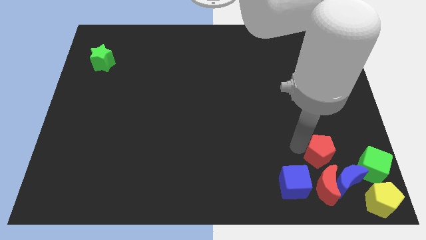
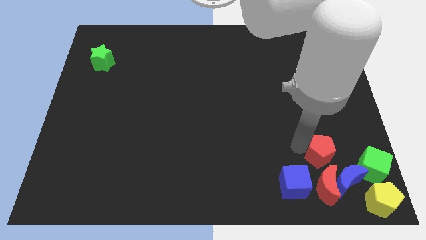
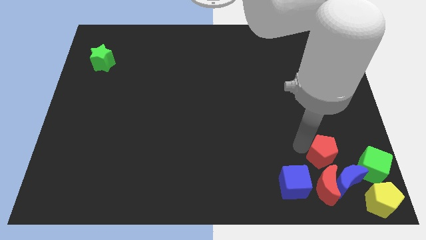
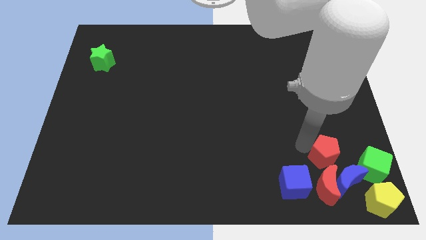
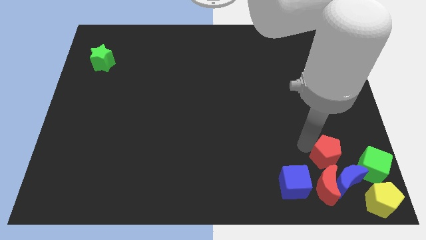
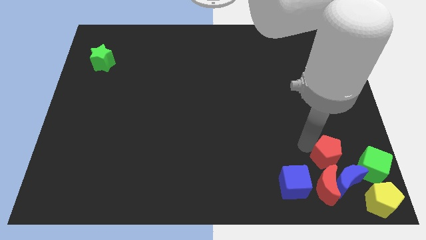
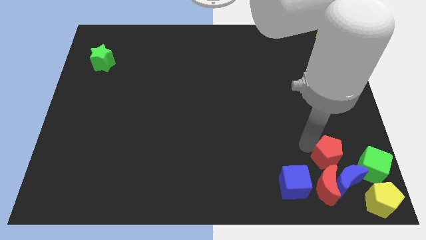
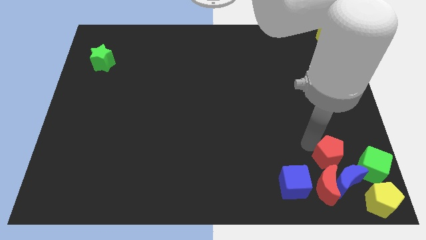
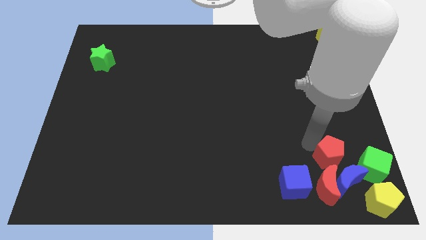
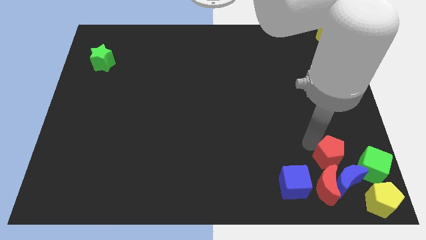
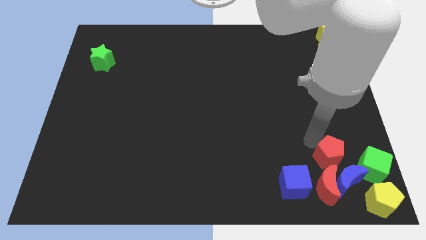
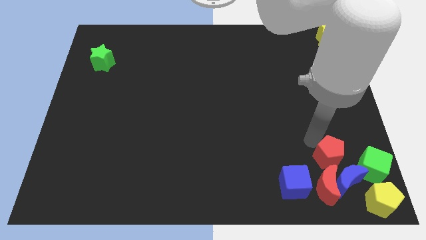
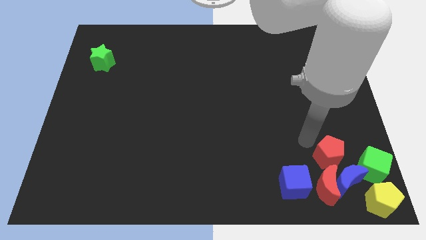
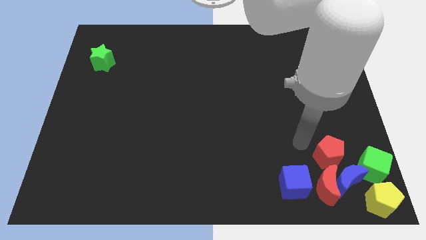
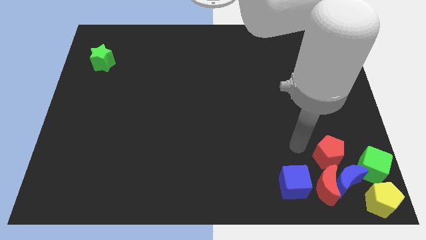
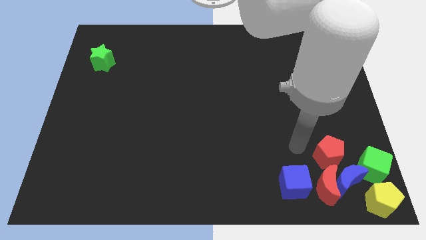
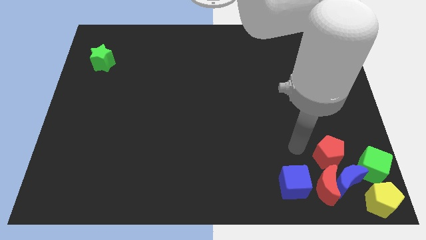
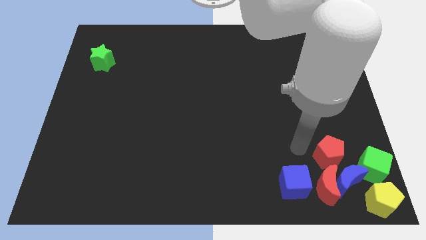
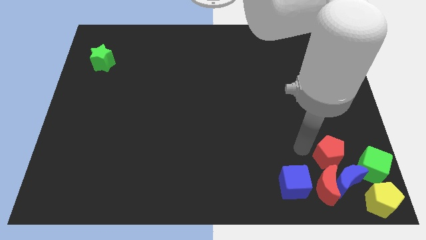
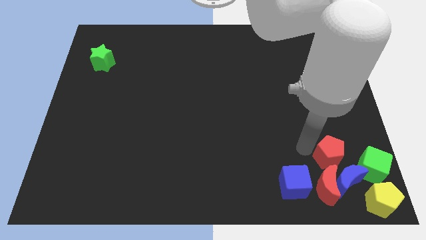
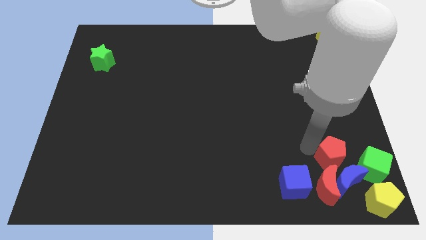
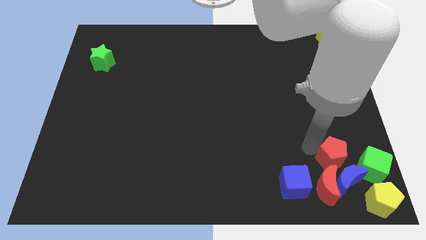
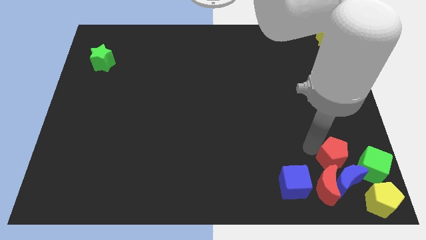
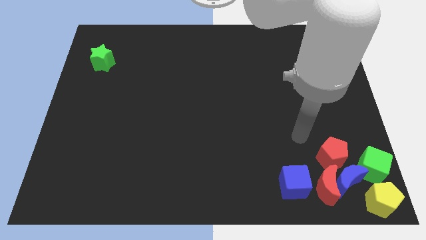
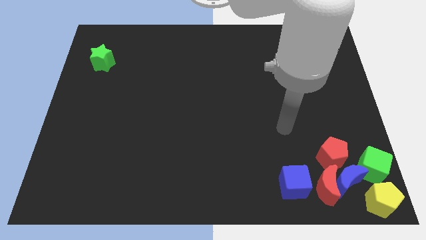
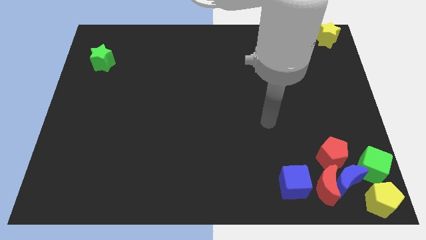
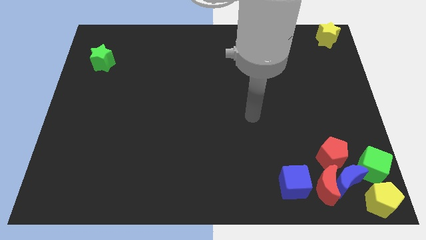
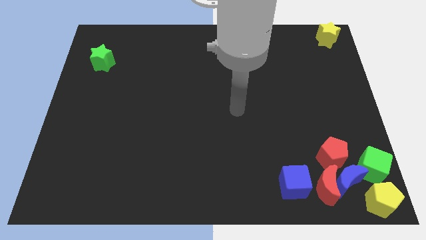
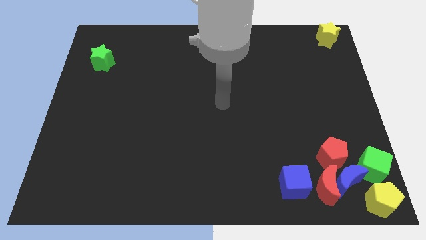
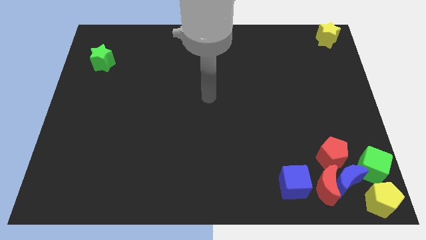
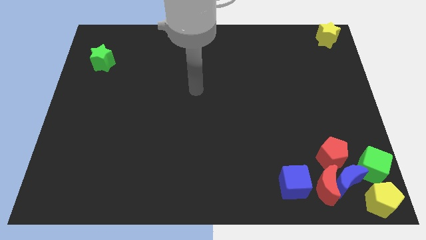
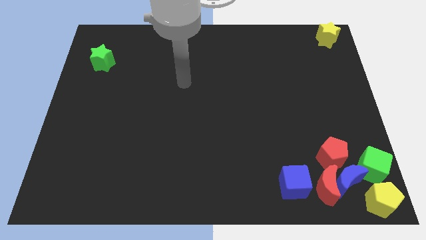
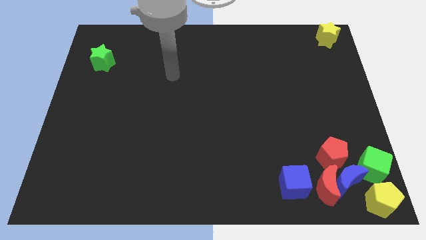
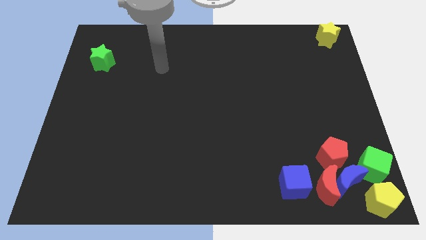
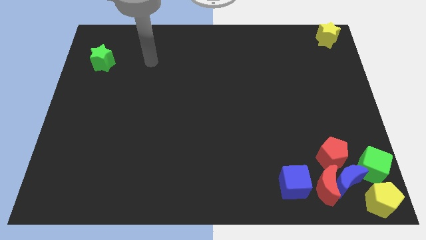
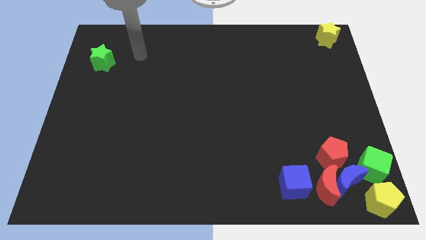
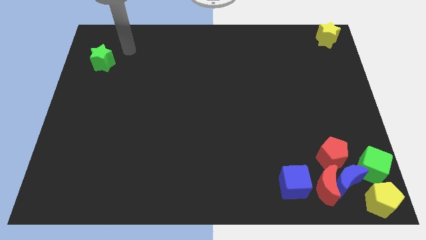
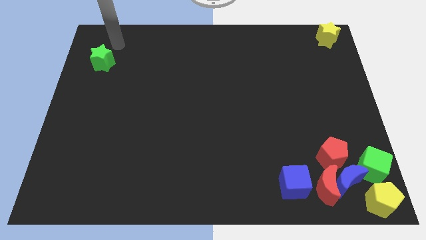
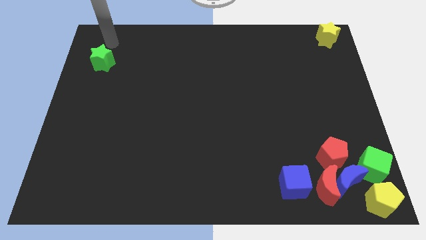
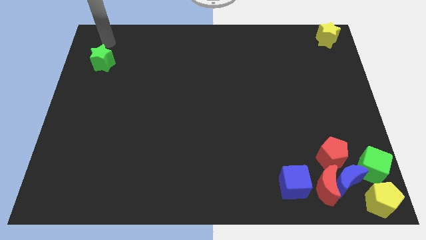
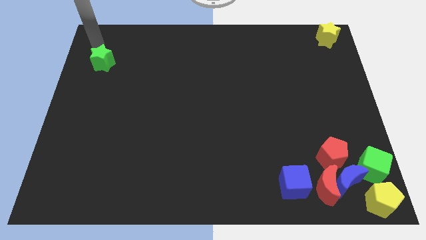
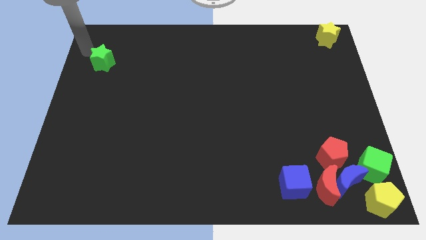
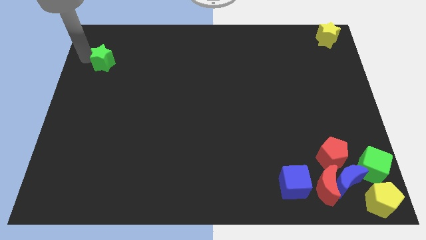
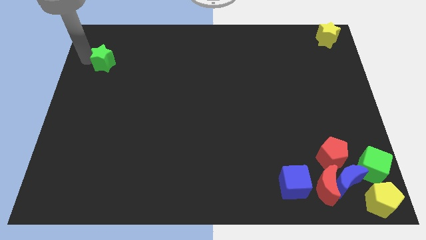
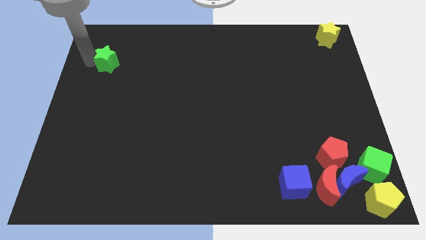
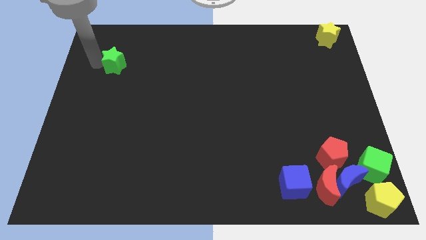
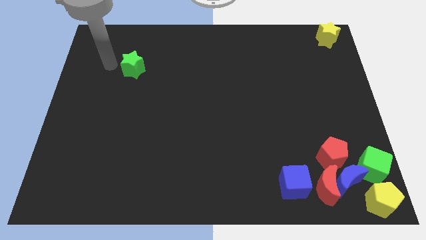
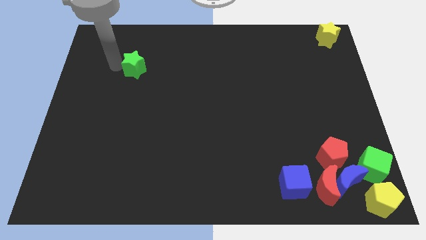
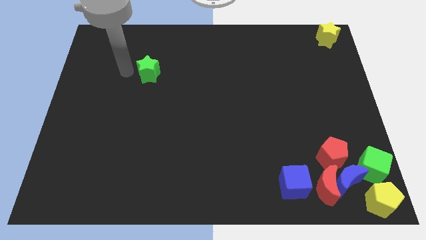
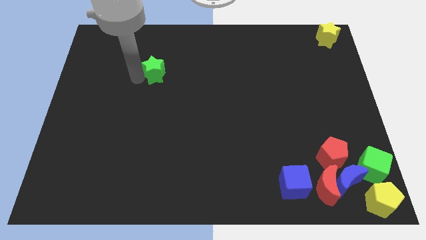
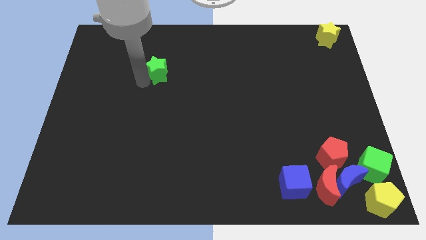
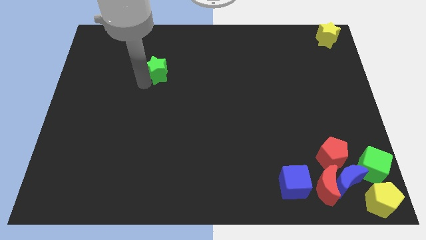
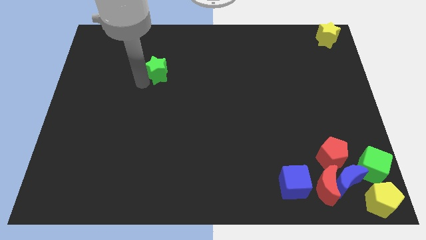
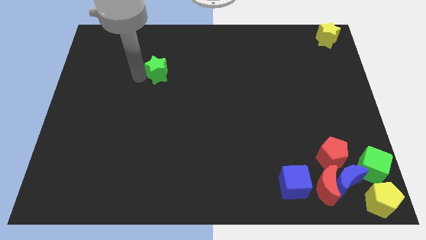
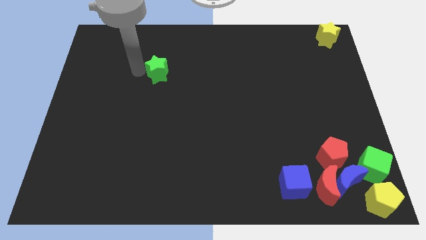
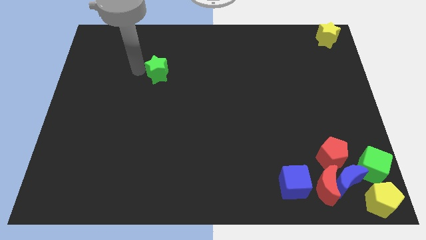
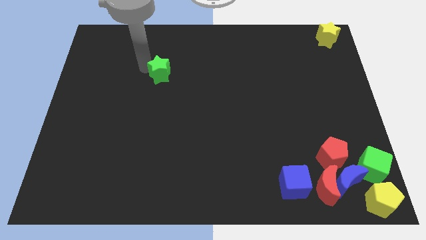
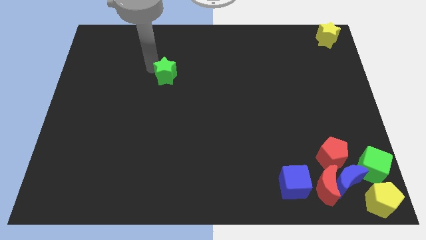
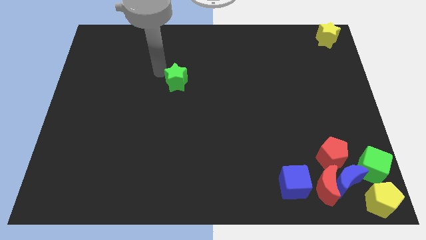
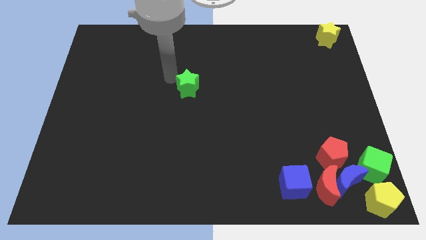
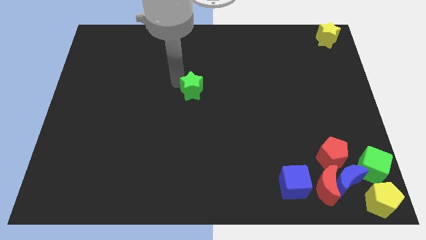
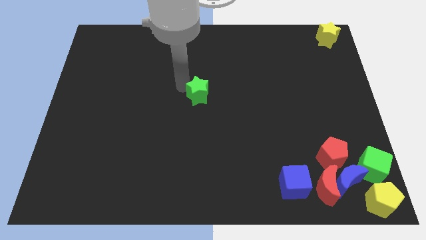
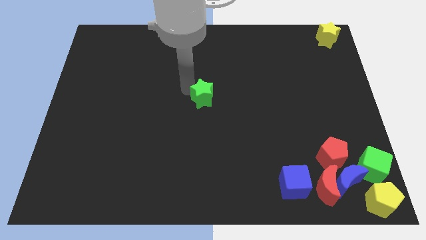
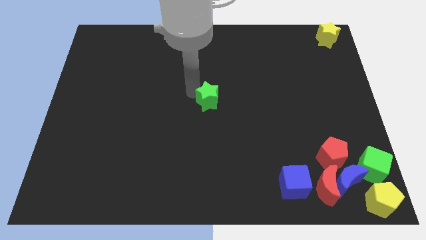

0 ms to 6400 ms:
move the green star to the middle of the board

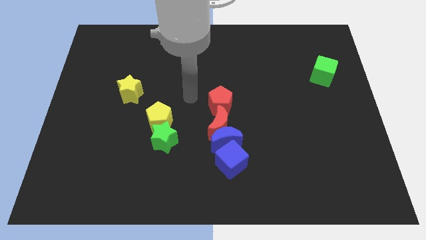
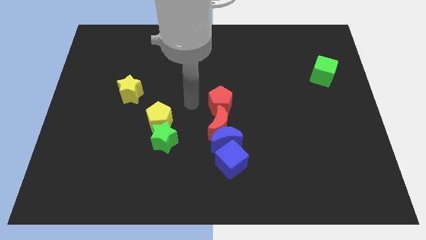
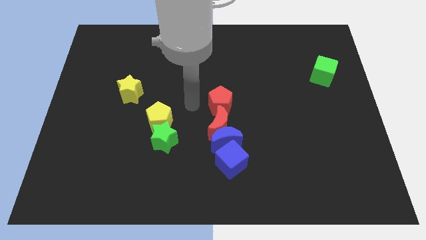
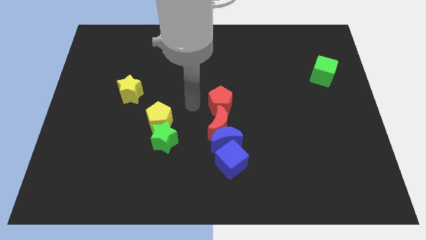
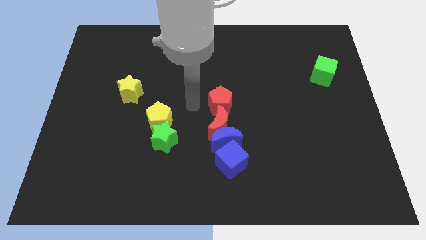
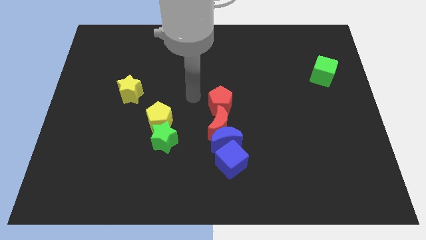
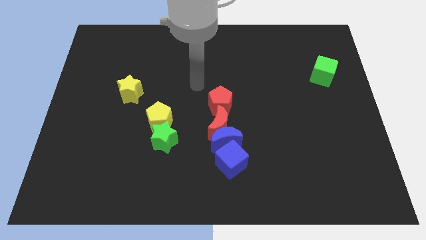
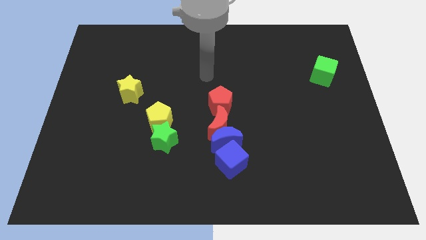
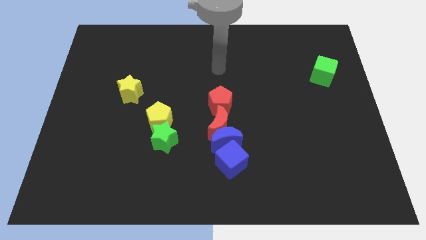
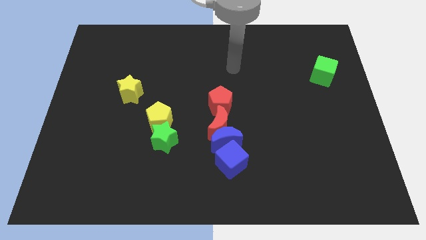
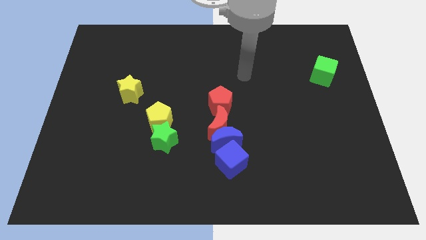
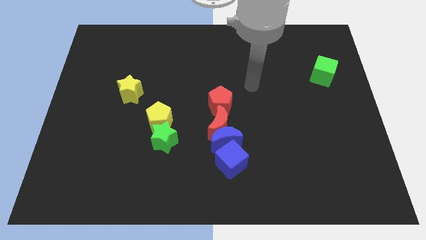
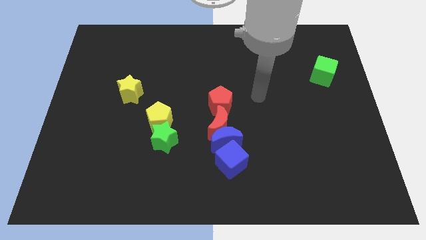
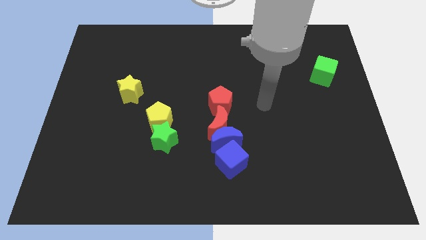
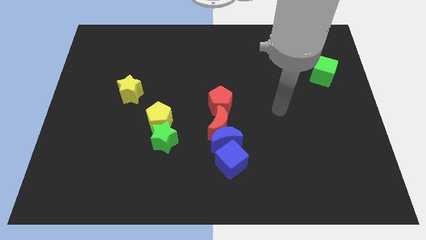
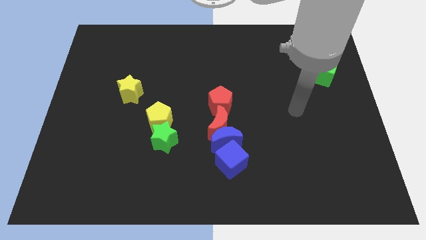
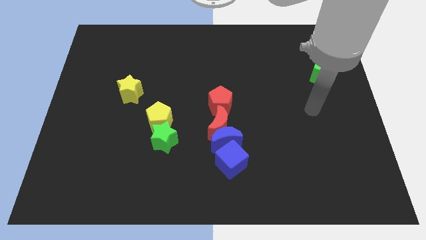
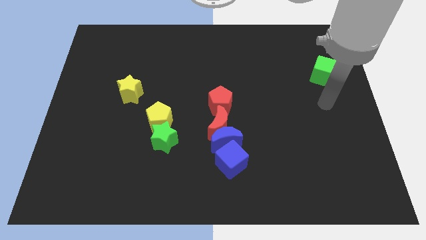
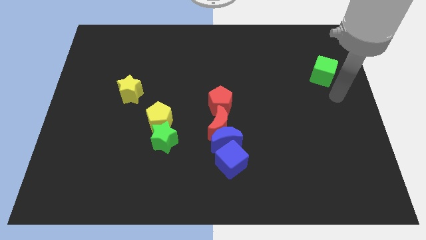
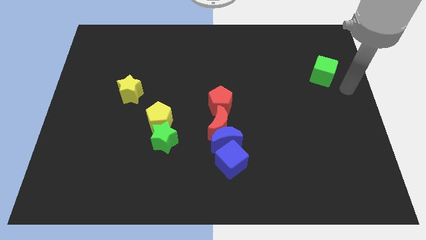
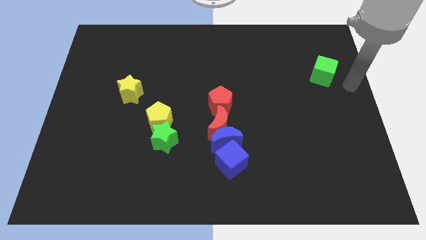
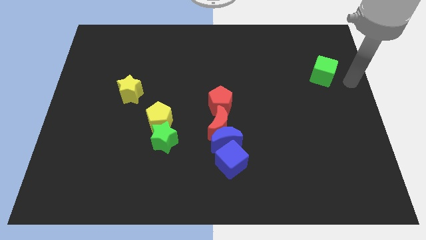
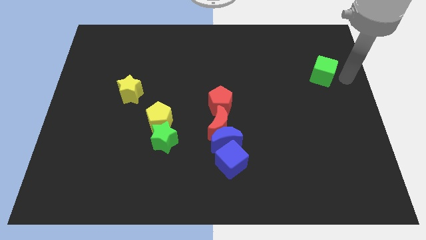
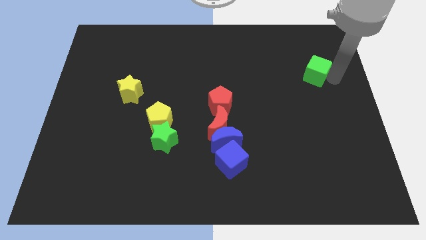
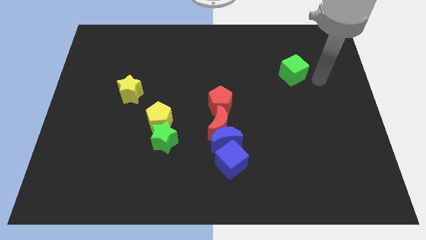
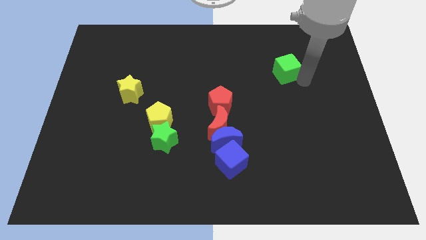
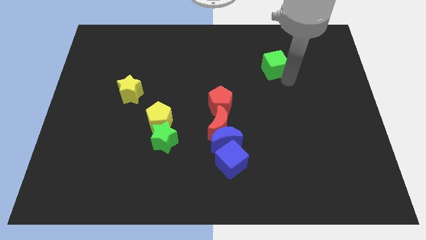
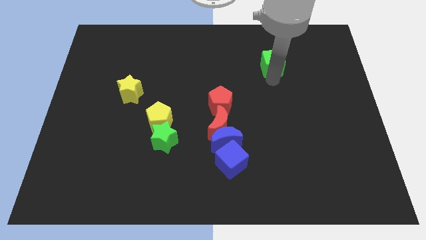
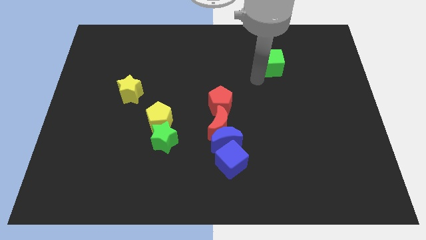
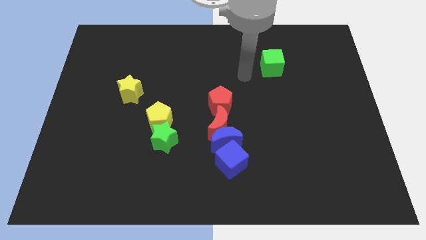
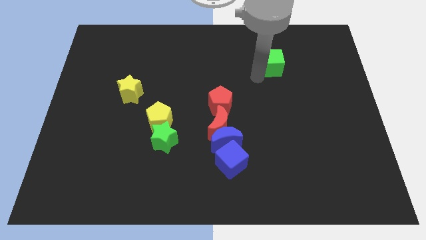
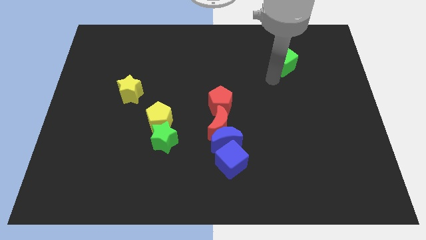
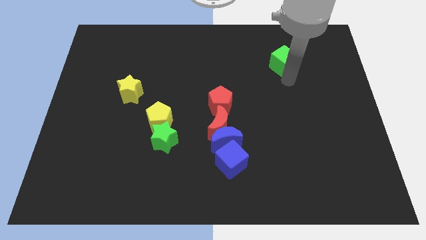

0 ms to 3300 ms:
push the green cube to the top right of the red pentagon
